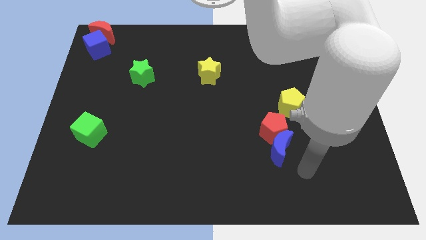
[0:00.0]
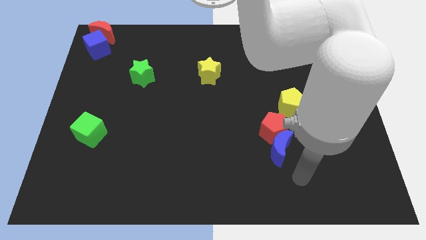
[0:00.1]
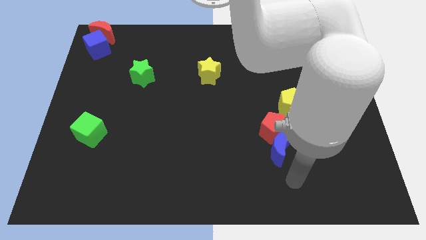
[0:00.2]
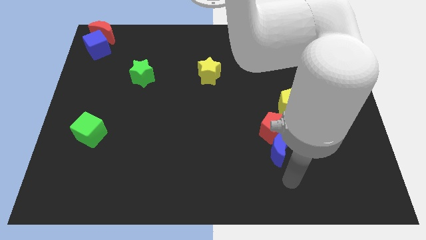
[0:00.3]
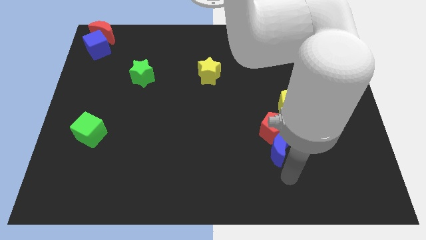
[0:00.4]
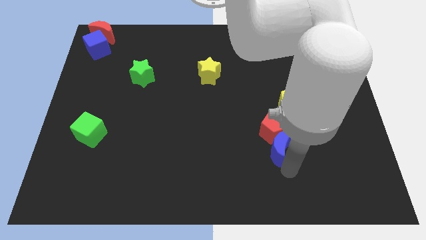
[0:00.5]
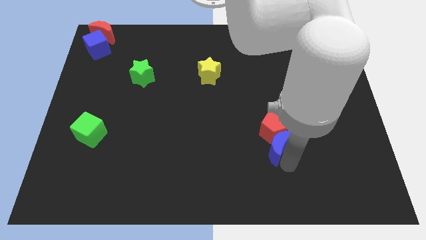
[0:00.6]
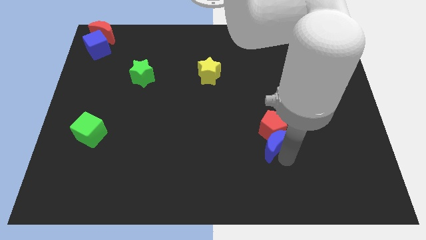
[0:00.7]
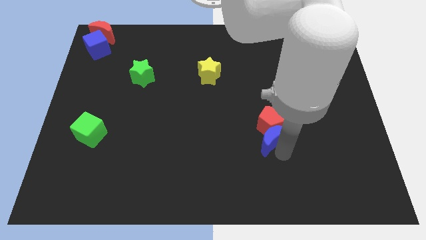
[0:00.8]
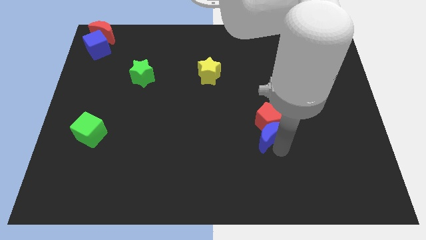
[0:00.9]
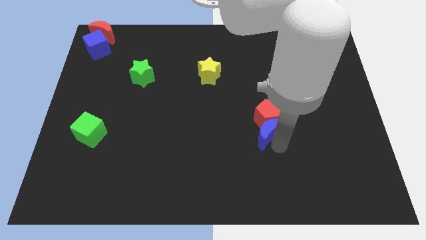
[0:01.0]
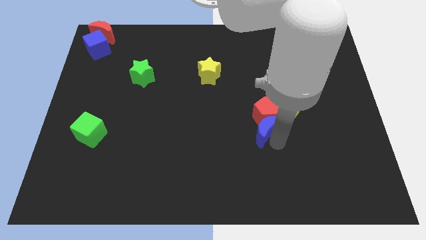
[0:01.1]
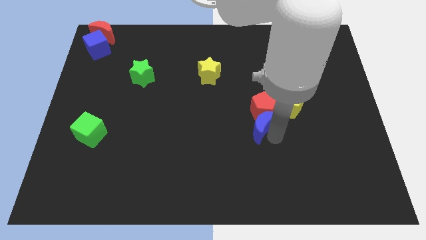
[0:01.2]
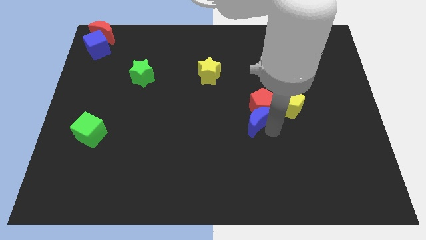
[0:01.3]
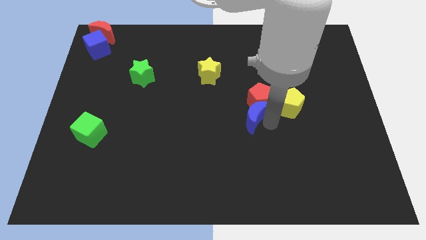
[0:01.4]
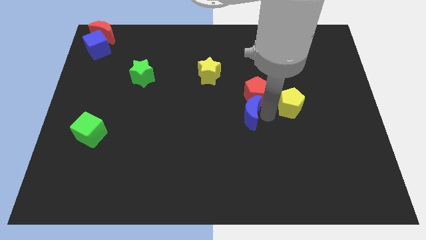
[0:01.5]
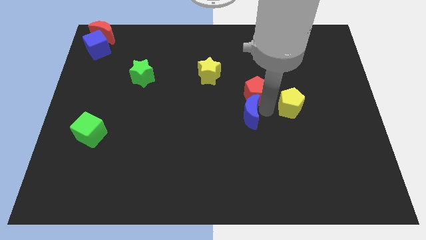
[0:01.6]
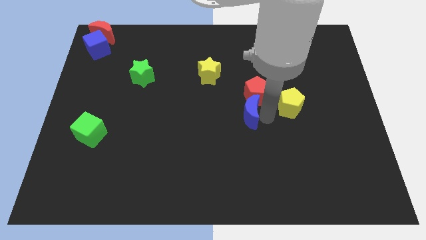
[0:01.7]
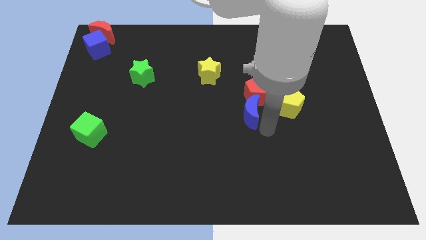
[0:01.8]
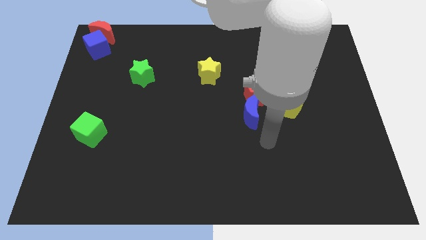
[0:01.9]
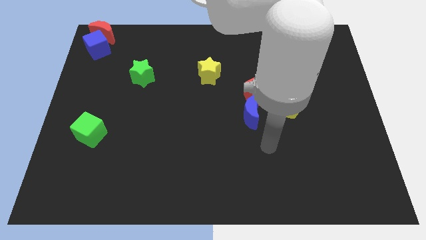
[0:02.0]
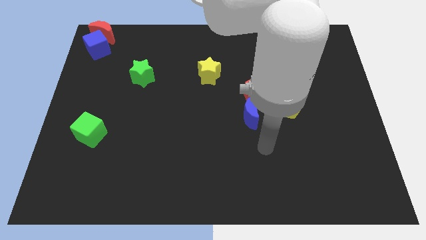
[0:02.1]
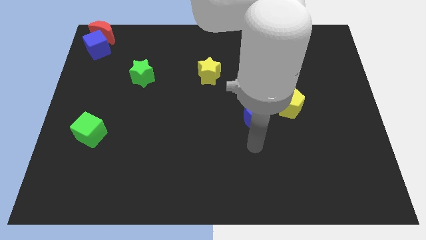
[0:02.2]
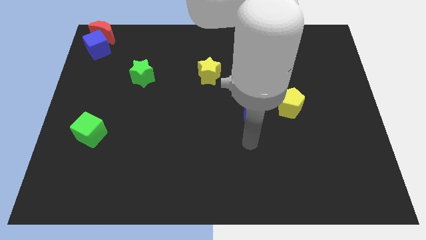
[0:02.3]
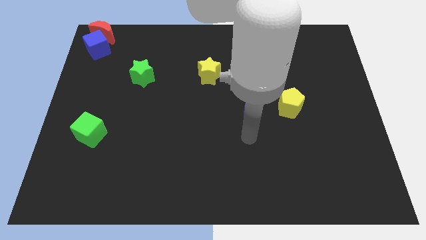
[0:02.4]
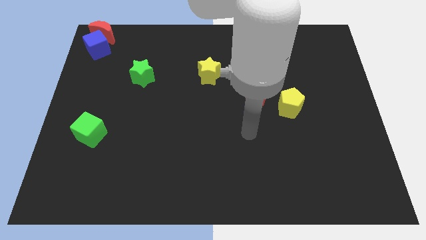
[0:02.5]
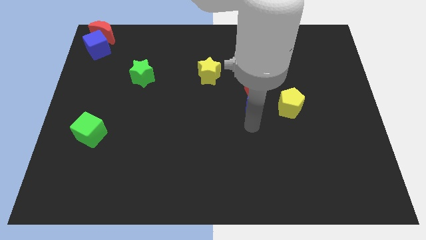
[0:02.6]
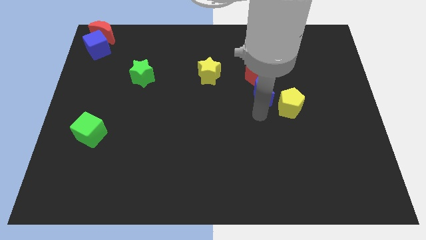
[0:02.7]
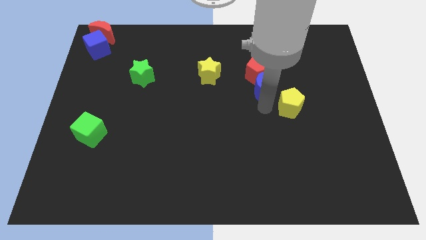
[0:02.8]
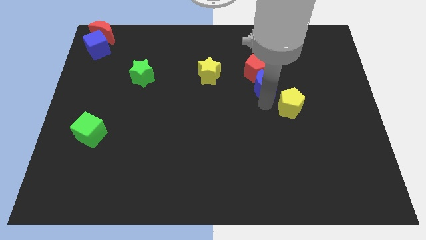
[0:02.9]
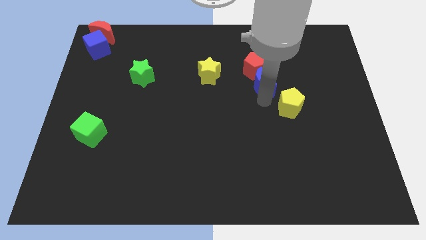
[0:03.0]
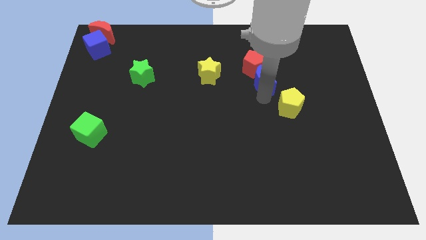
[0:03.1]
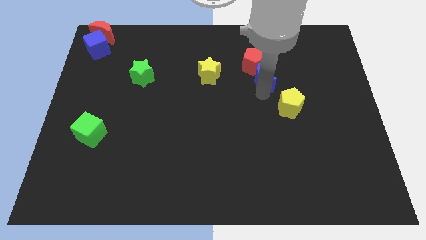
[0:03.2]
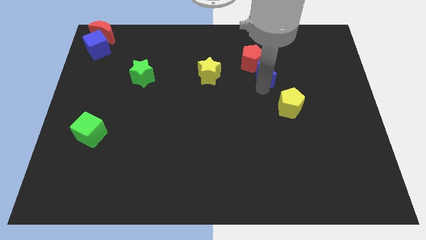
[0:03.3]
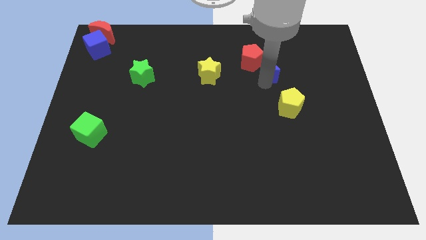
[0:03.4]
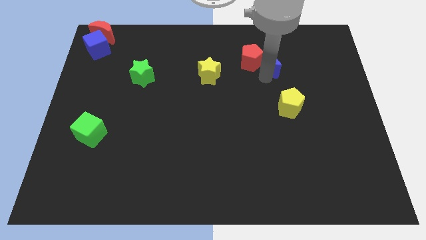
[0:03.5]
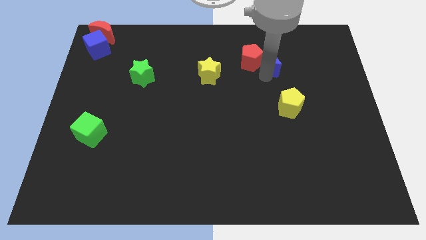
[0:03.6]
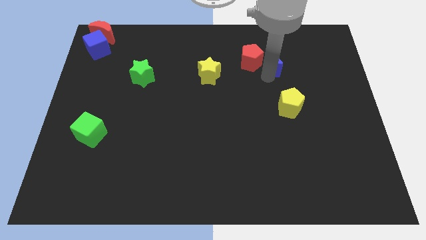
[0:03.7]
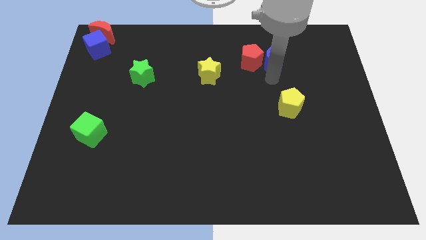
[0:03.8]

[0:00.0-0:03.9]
slide the red pentagon and the blue moon towards the top

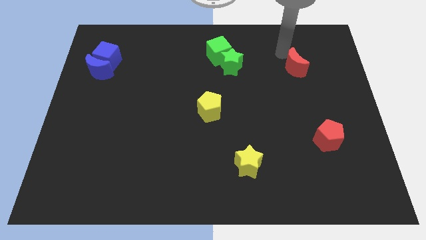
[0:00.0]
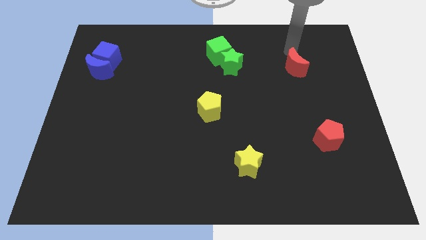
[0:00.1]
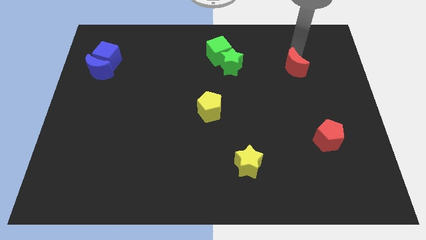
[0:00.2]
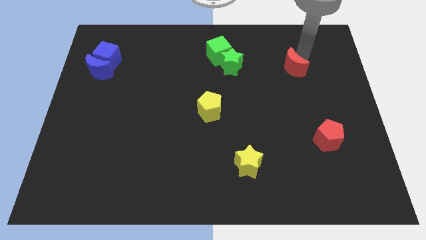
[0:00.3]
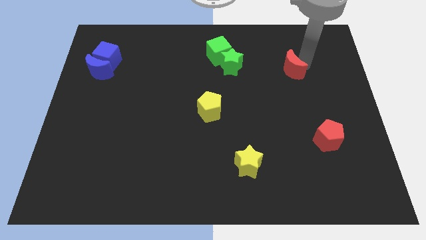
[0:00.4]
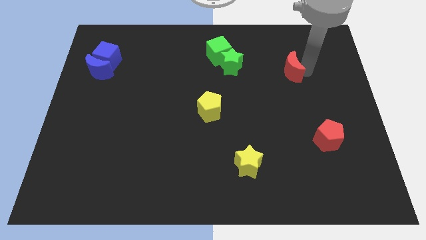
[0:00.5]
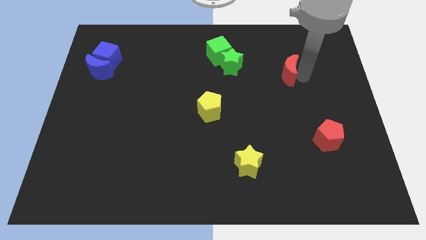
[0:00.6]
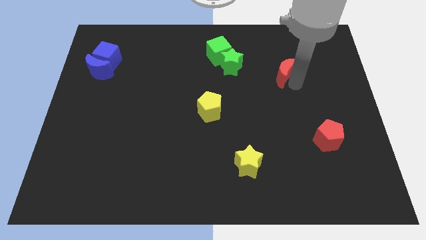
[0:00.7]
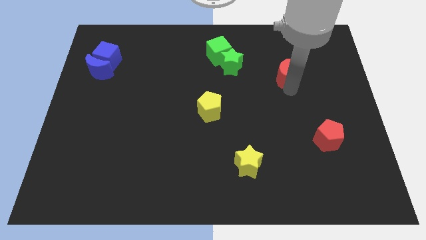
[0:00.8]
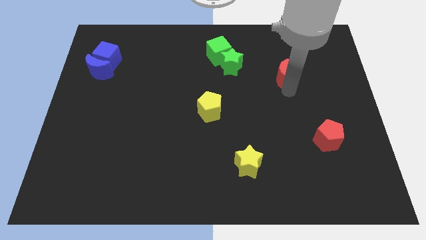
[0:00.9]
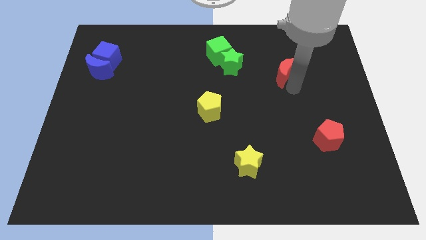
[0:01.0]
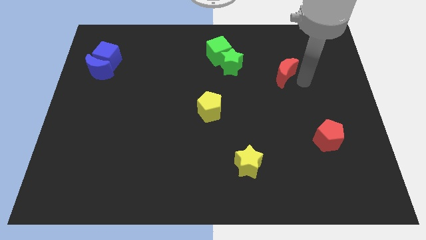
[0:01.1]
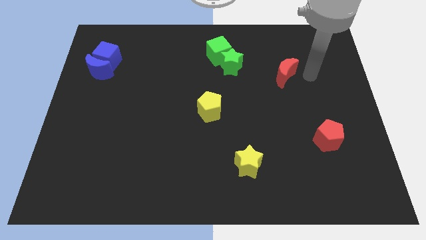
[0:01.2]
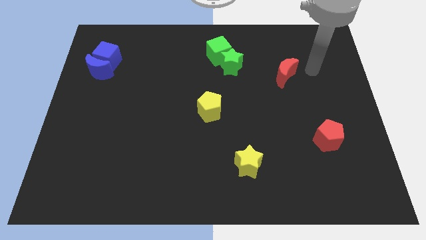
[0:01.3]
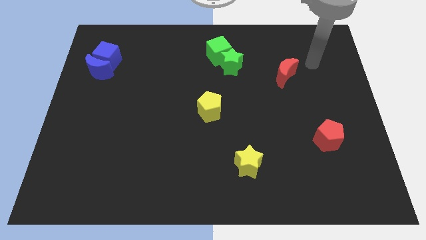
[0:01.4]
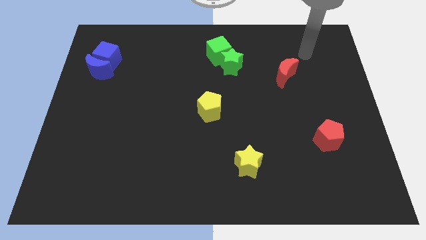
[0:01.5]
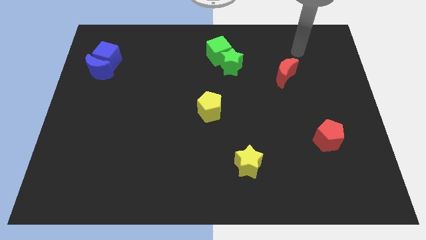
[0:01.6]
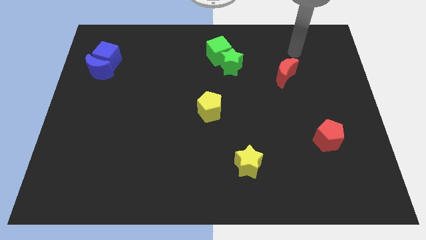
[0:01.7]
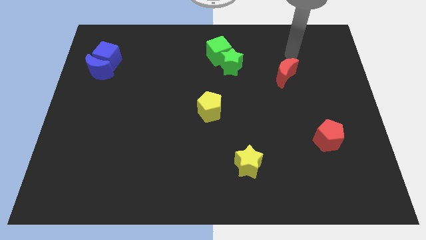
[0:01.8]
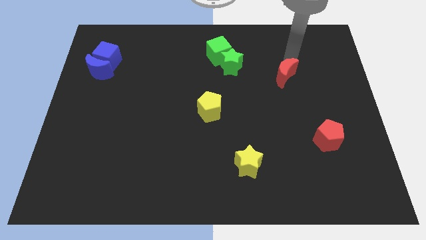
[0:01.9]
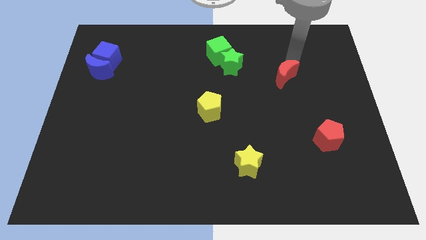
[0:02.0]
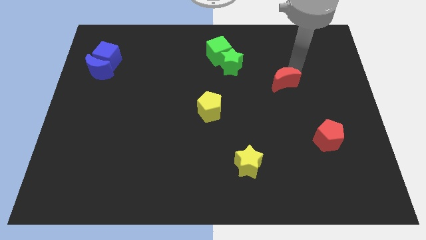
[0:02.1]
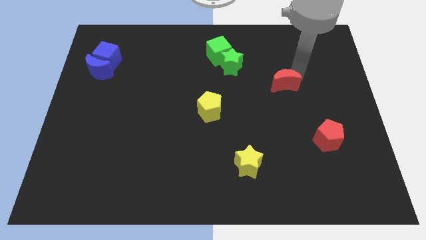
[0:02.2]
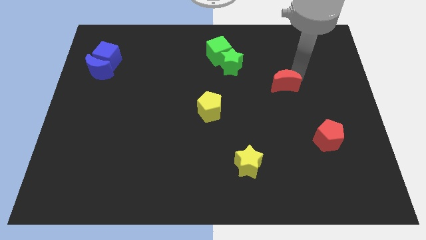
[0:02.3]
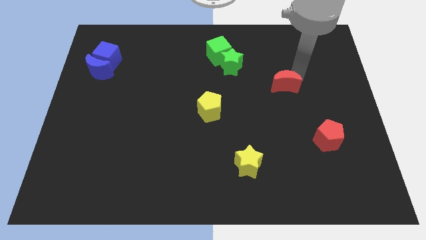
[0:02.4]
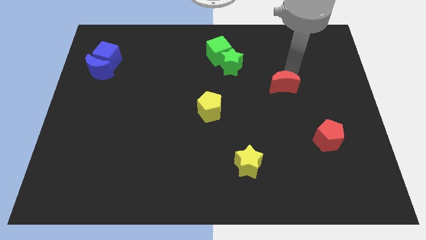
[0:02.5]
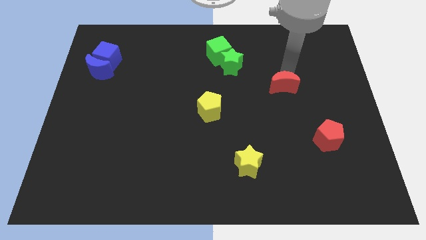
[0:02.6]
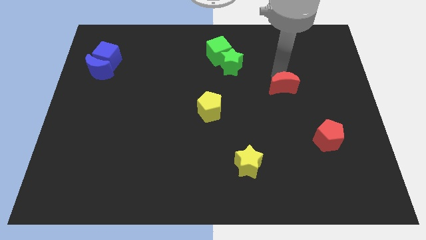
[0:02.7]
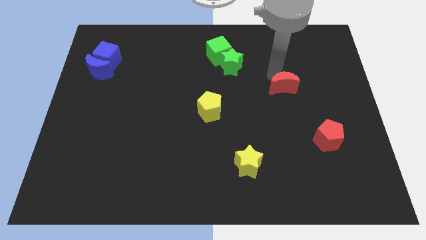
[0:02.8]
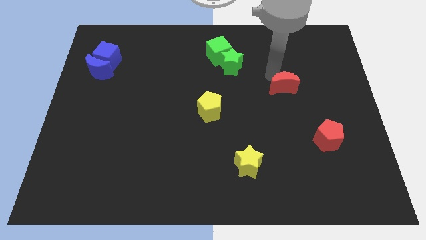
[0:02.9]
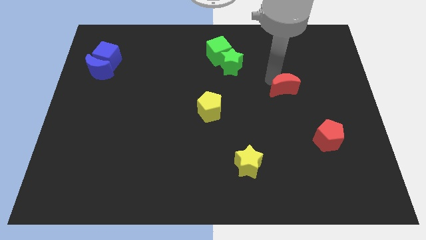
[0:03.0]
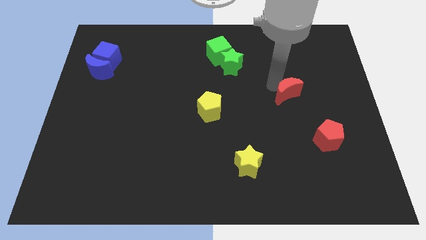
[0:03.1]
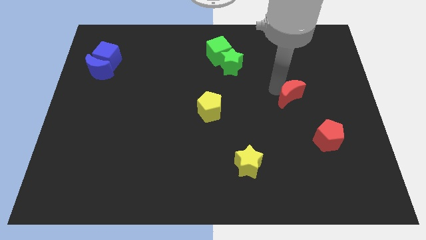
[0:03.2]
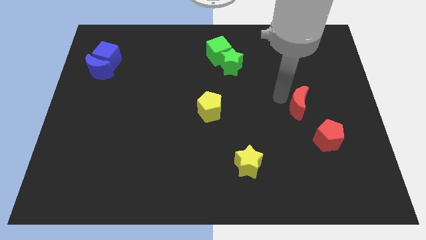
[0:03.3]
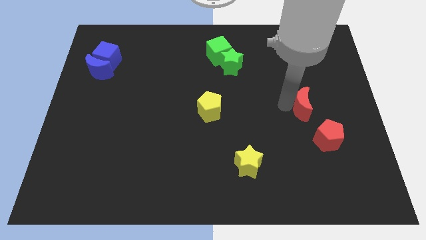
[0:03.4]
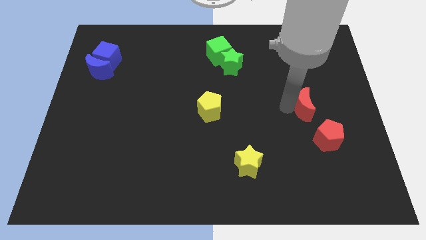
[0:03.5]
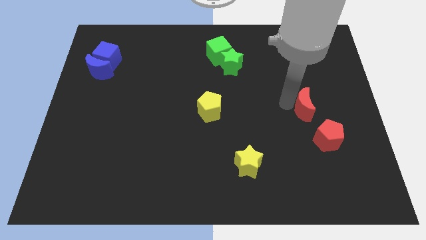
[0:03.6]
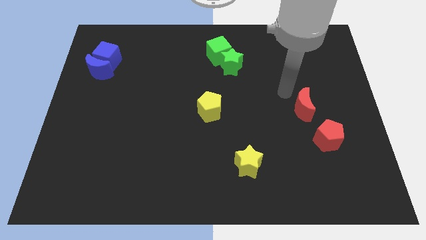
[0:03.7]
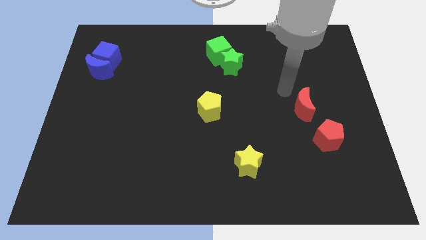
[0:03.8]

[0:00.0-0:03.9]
push the red crescent to the top of the red pentagon

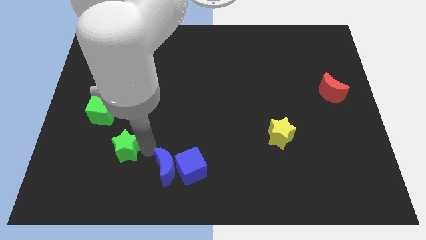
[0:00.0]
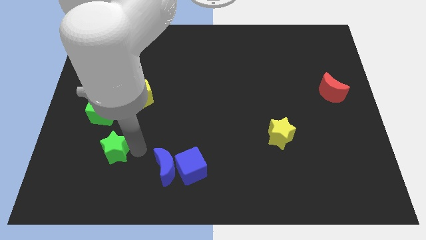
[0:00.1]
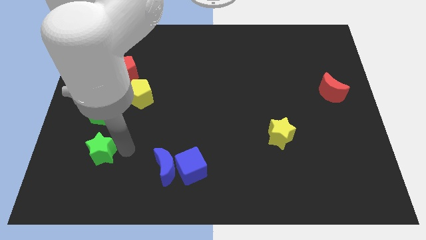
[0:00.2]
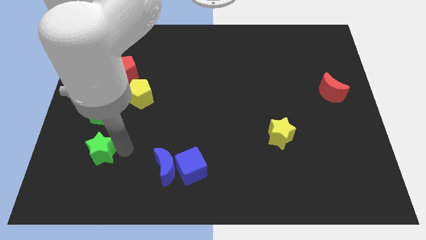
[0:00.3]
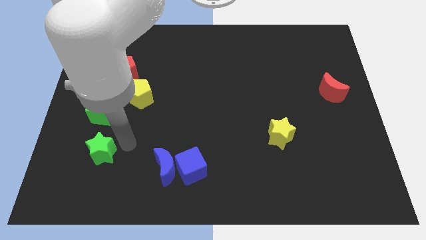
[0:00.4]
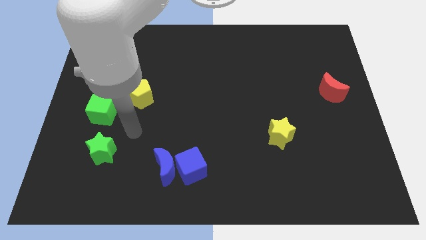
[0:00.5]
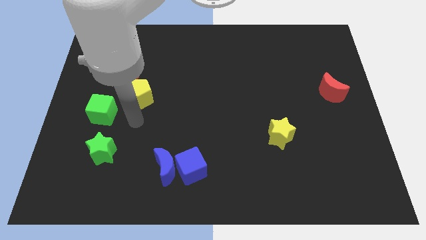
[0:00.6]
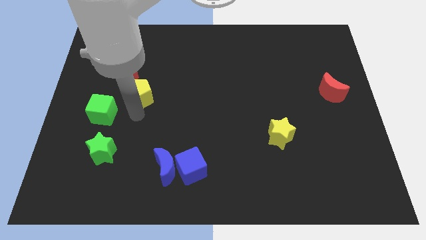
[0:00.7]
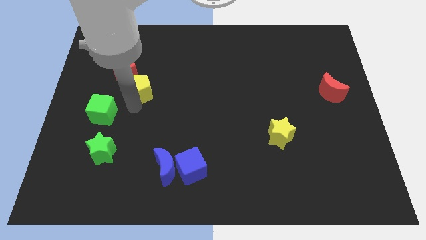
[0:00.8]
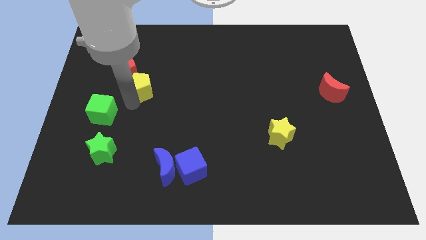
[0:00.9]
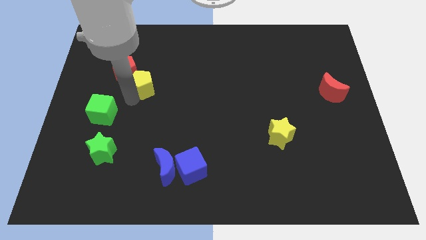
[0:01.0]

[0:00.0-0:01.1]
slide green star below the green cube
